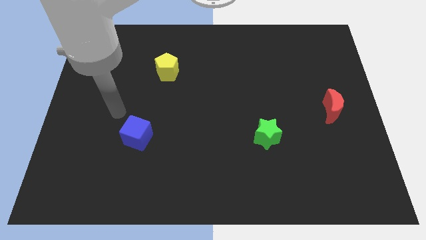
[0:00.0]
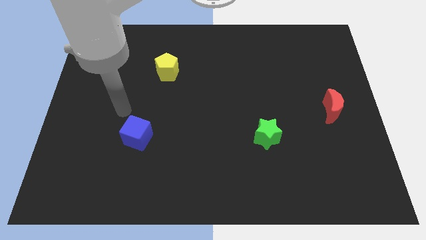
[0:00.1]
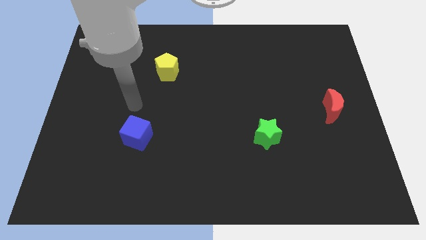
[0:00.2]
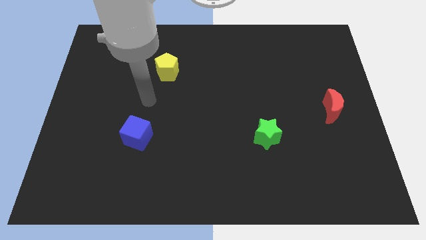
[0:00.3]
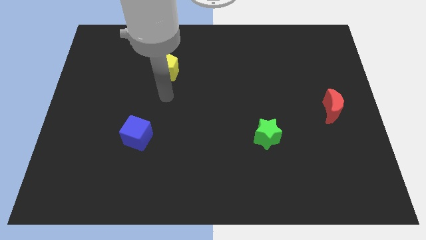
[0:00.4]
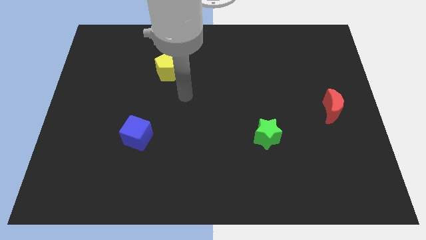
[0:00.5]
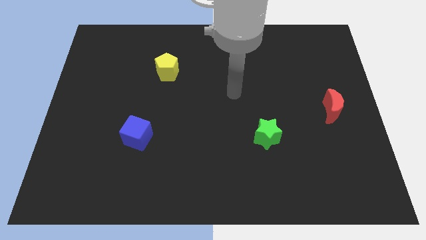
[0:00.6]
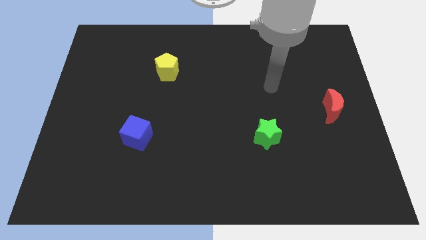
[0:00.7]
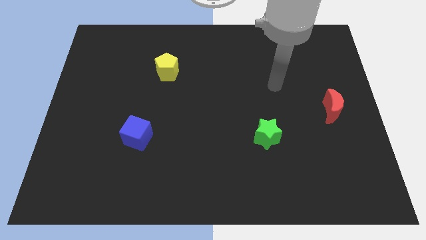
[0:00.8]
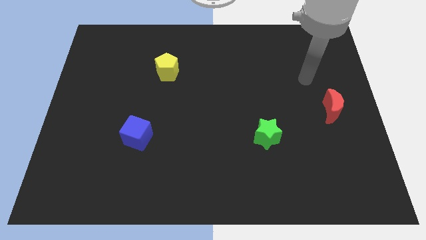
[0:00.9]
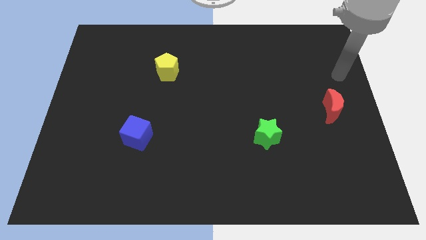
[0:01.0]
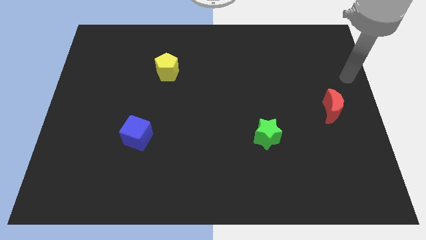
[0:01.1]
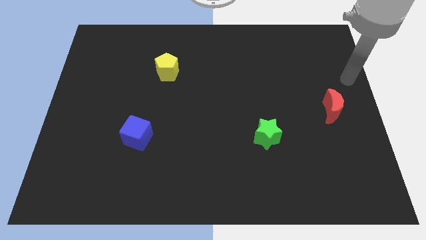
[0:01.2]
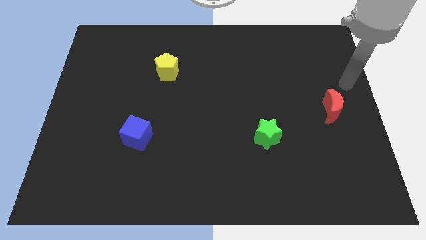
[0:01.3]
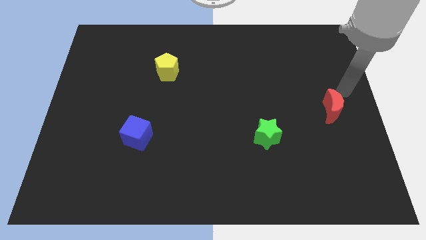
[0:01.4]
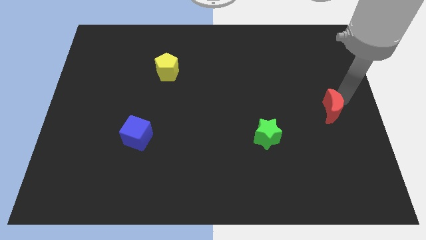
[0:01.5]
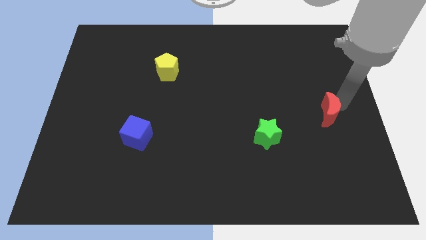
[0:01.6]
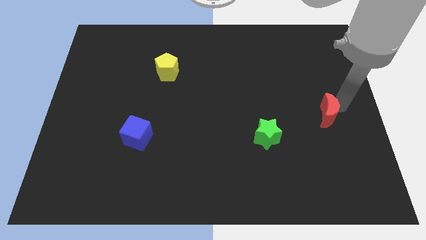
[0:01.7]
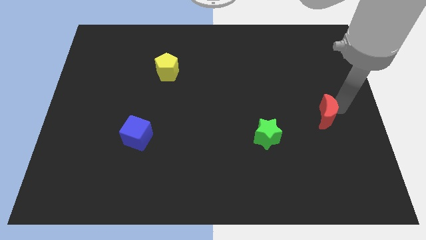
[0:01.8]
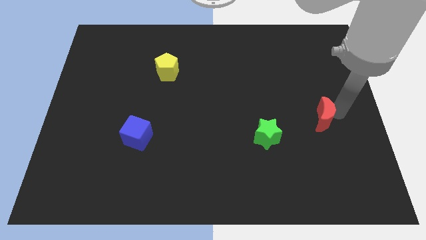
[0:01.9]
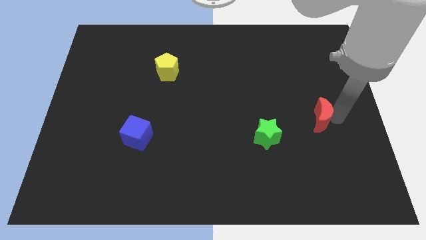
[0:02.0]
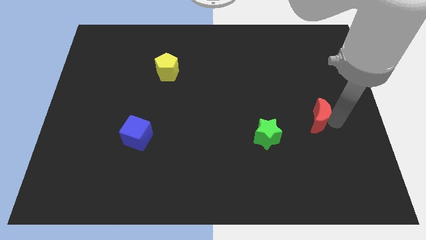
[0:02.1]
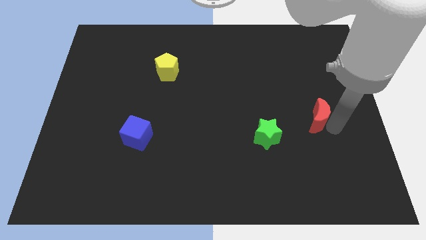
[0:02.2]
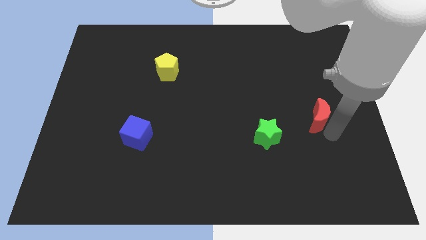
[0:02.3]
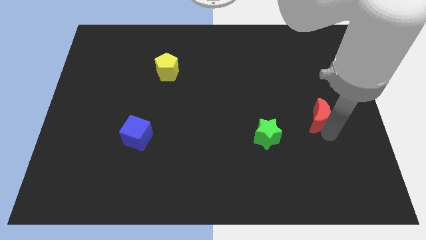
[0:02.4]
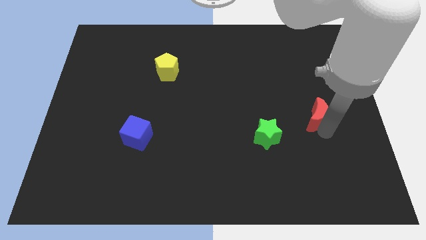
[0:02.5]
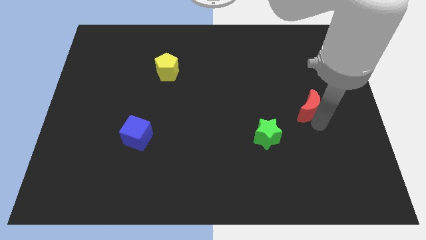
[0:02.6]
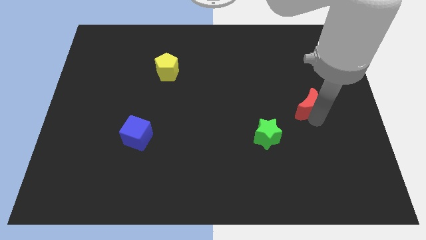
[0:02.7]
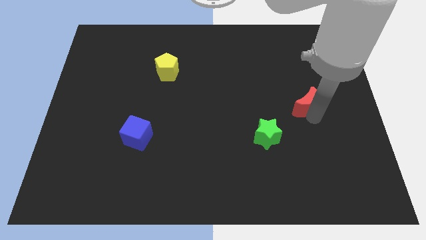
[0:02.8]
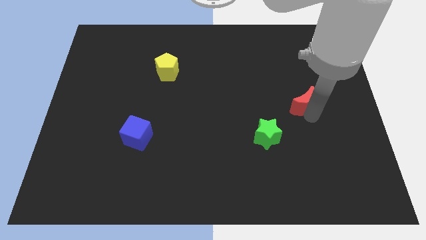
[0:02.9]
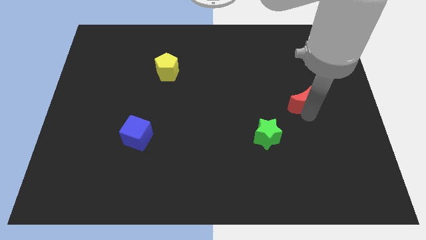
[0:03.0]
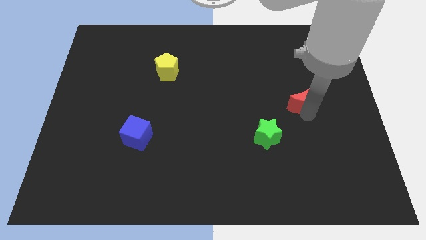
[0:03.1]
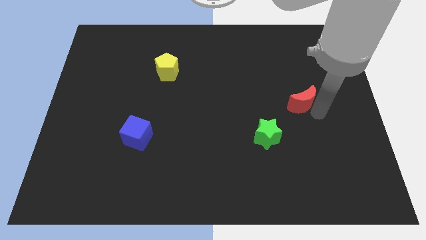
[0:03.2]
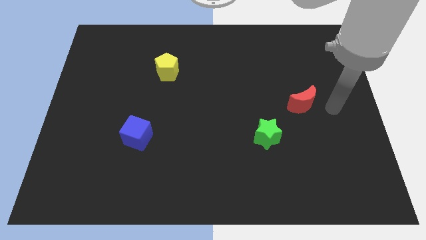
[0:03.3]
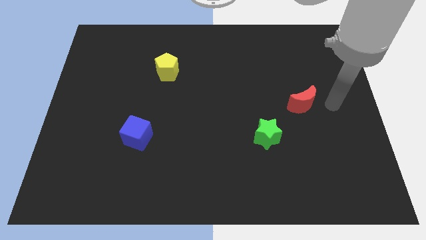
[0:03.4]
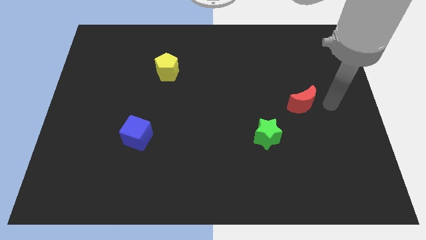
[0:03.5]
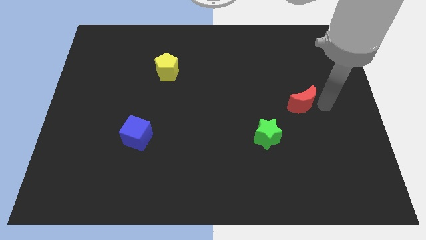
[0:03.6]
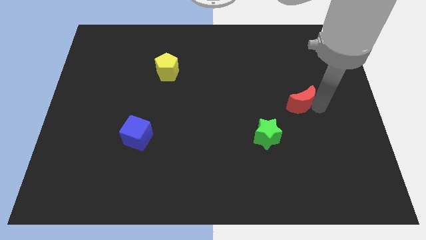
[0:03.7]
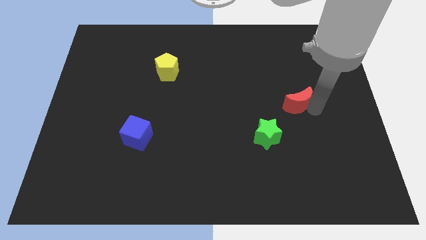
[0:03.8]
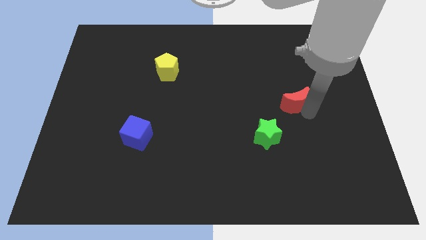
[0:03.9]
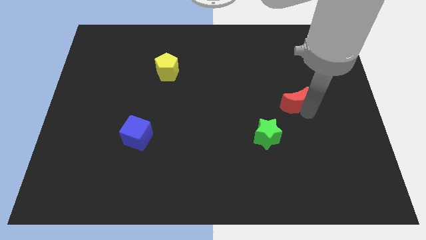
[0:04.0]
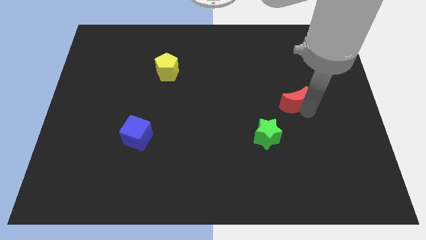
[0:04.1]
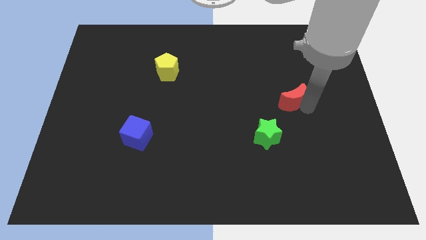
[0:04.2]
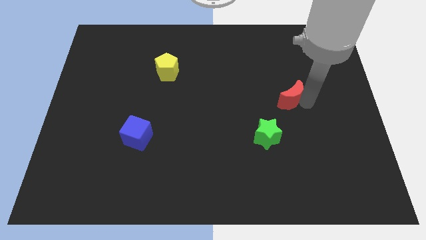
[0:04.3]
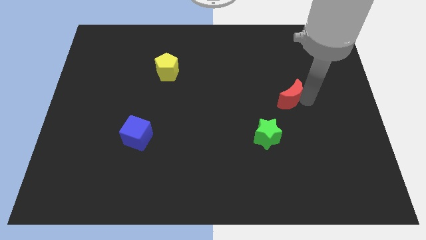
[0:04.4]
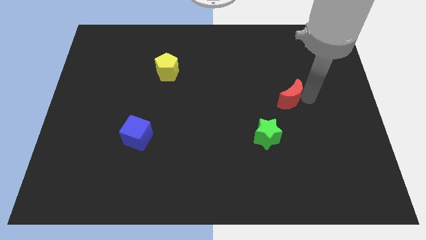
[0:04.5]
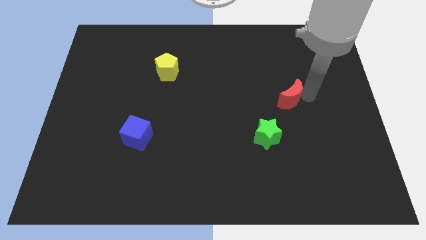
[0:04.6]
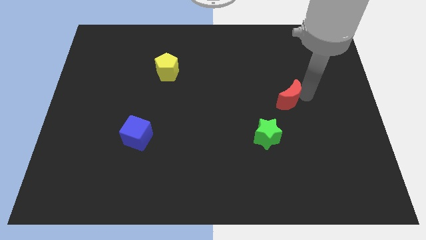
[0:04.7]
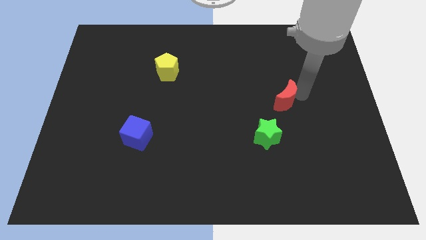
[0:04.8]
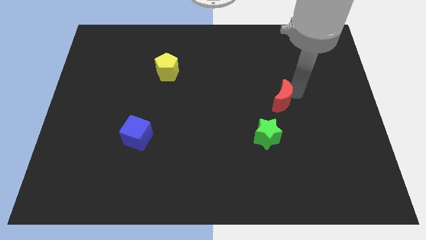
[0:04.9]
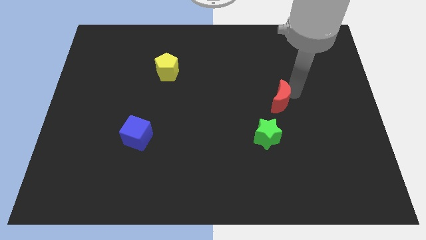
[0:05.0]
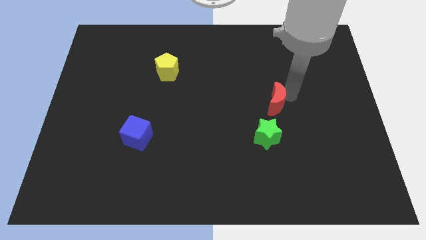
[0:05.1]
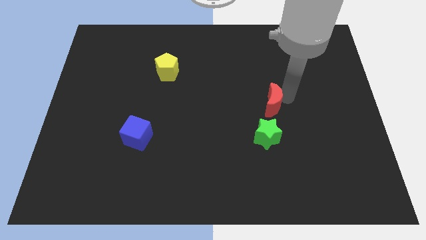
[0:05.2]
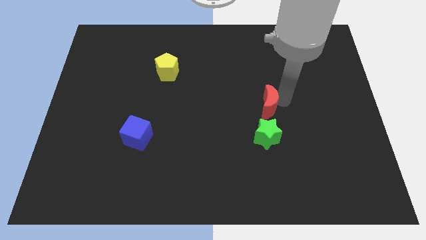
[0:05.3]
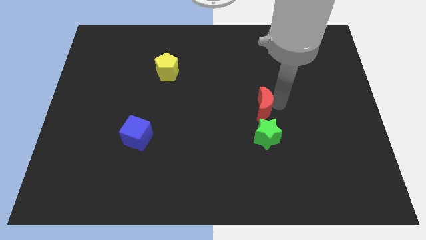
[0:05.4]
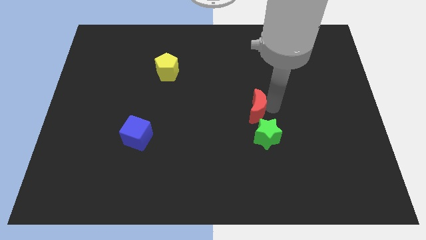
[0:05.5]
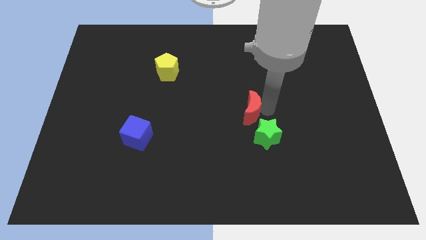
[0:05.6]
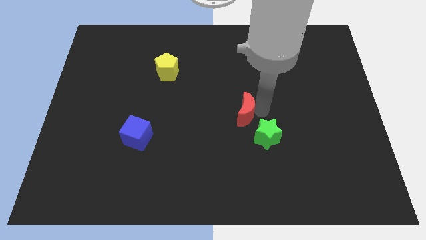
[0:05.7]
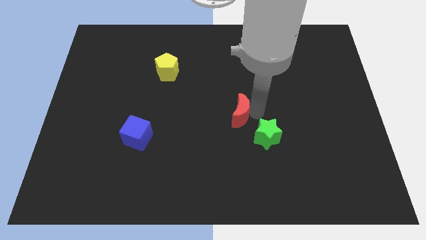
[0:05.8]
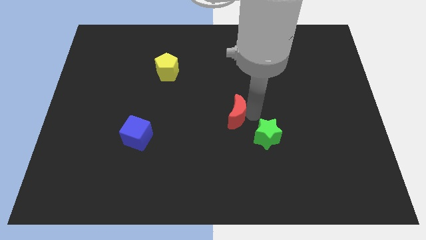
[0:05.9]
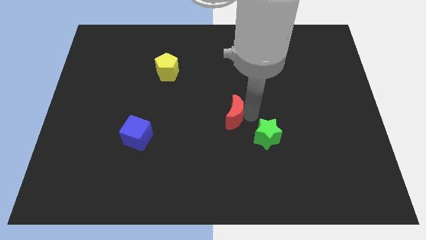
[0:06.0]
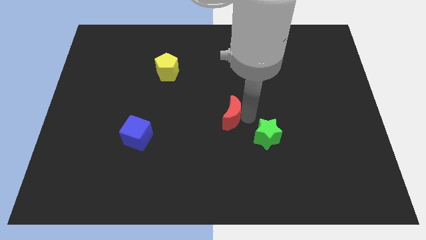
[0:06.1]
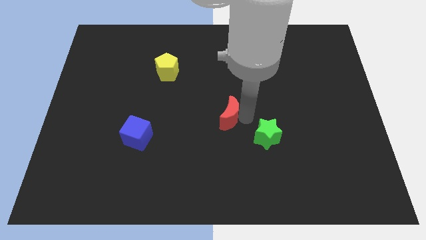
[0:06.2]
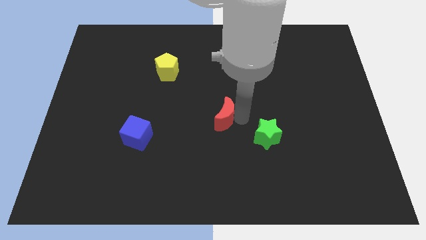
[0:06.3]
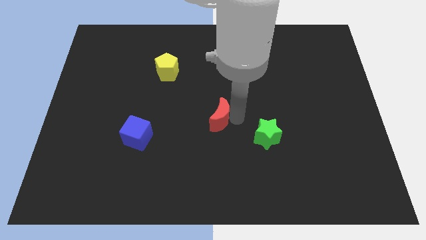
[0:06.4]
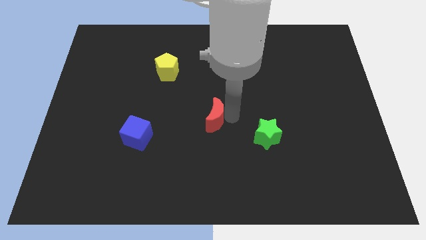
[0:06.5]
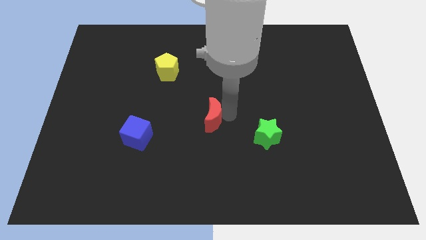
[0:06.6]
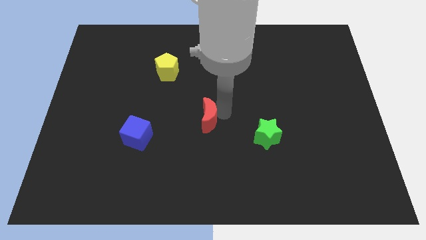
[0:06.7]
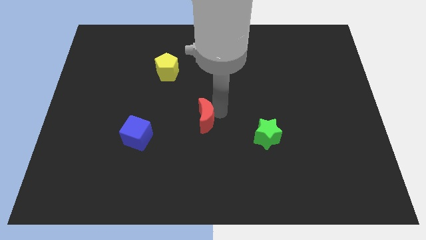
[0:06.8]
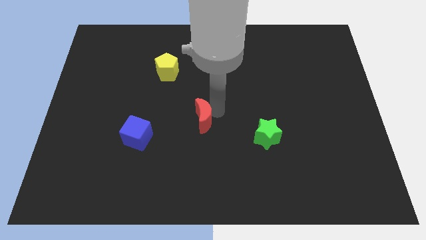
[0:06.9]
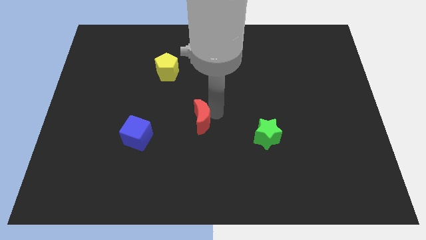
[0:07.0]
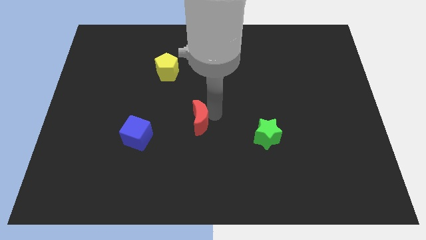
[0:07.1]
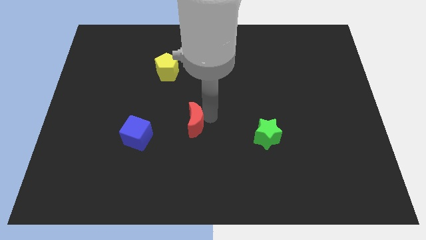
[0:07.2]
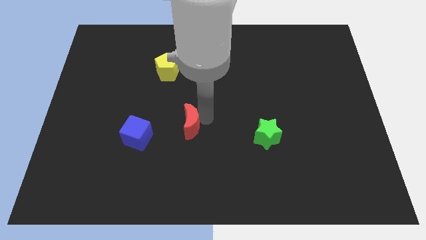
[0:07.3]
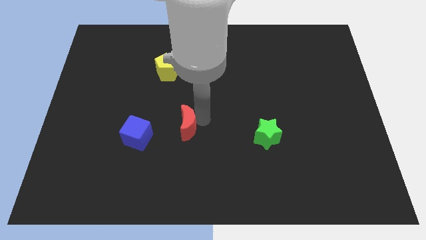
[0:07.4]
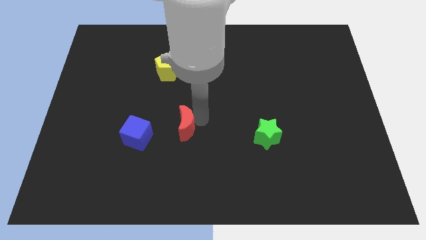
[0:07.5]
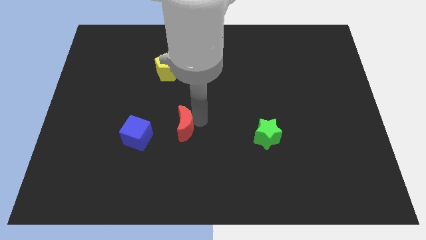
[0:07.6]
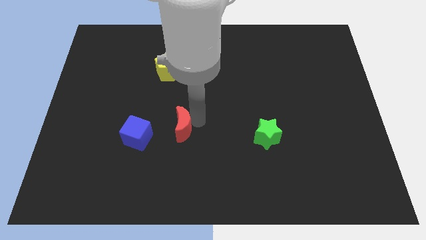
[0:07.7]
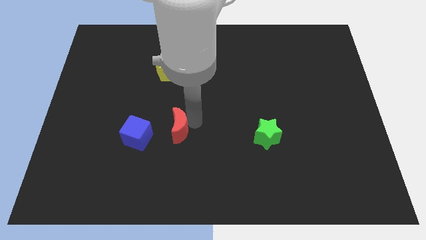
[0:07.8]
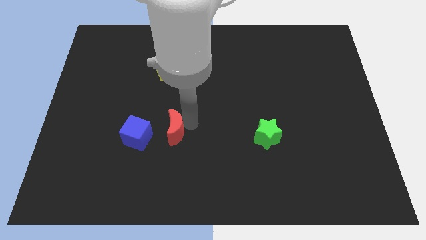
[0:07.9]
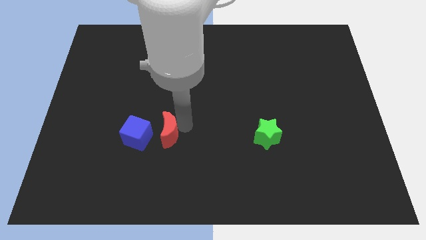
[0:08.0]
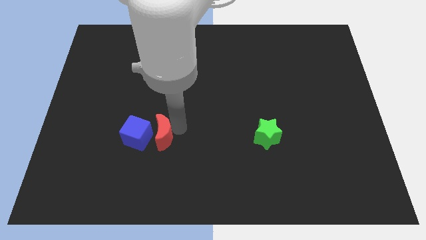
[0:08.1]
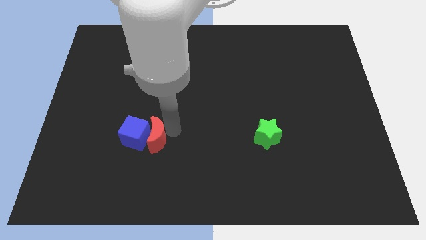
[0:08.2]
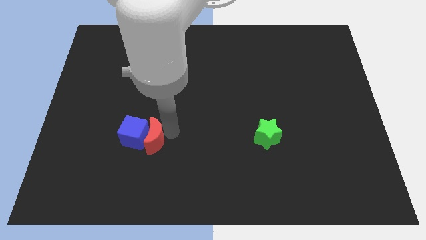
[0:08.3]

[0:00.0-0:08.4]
move the moon to the blue block

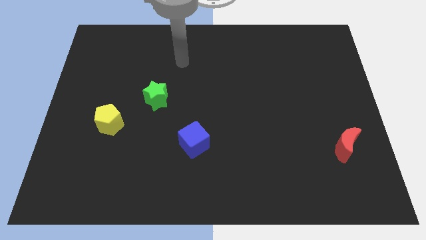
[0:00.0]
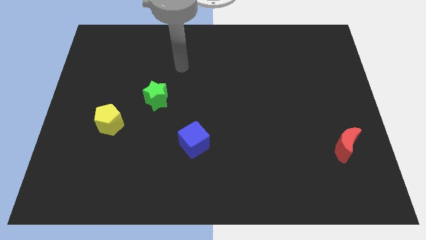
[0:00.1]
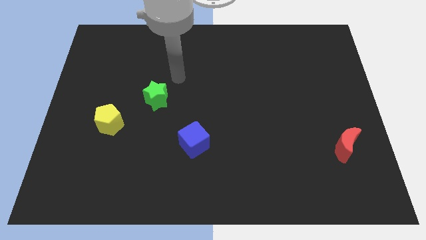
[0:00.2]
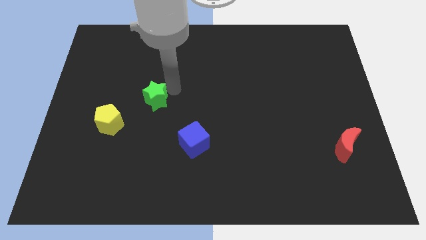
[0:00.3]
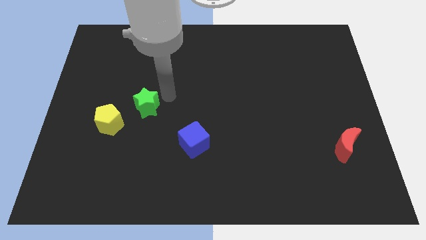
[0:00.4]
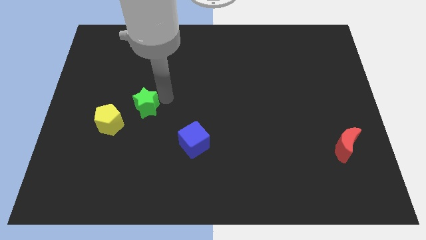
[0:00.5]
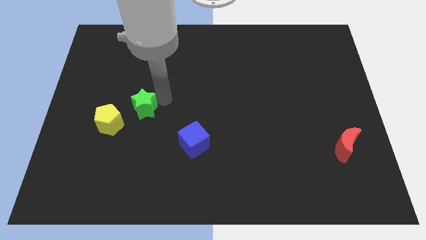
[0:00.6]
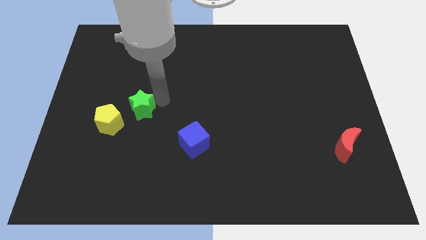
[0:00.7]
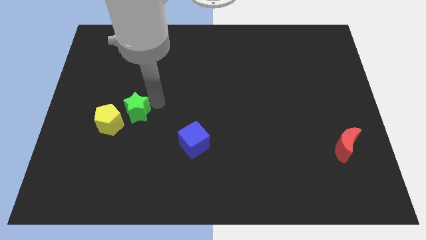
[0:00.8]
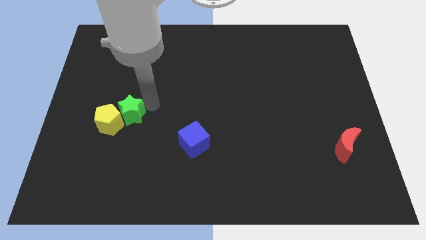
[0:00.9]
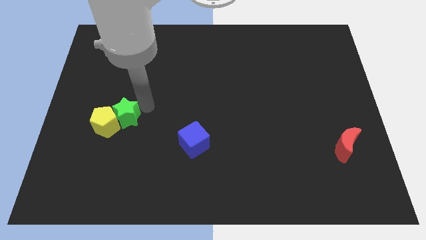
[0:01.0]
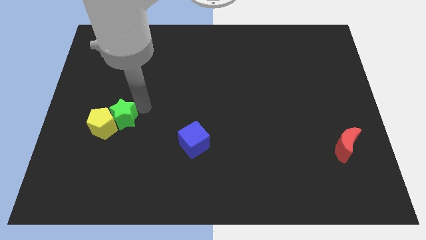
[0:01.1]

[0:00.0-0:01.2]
put the star towards the pentagon
